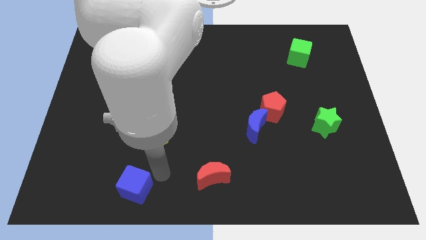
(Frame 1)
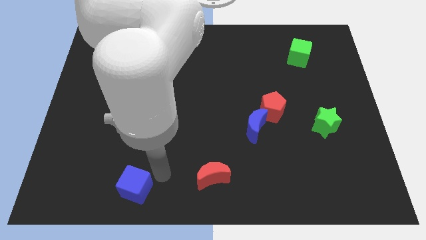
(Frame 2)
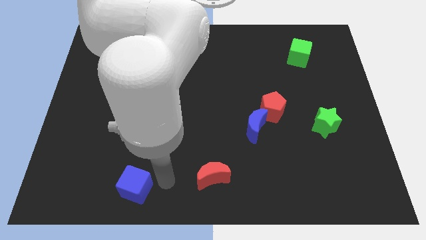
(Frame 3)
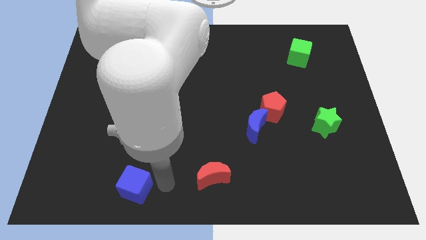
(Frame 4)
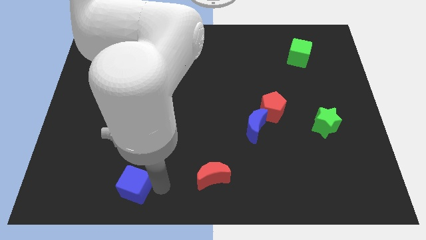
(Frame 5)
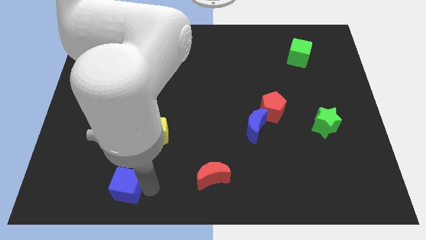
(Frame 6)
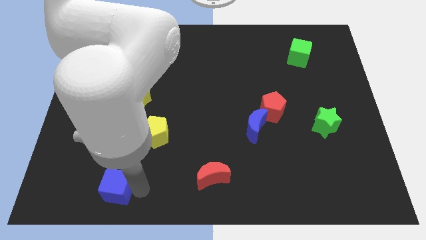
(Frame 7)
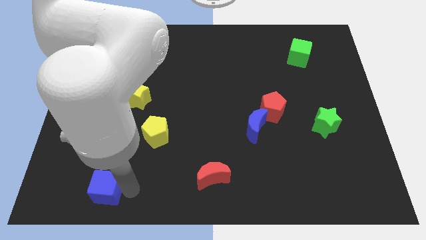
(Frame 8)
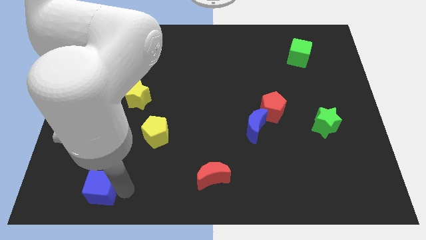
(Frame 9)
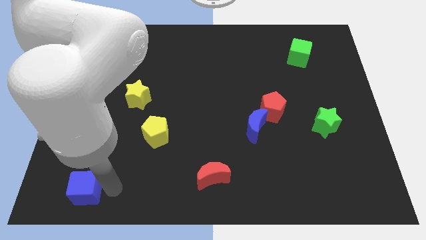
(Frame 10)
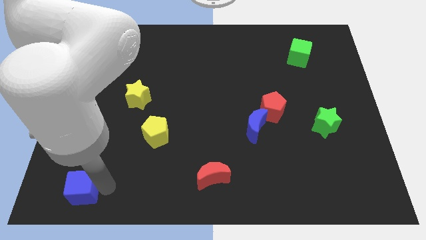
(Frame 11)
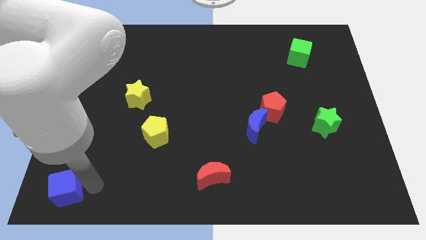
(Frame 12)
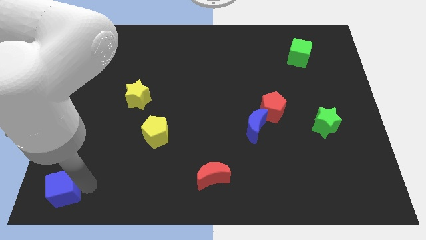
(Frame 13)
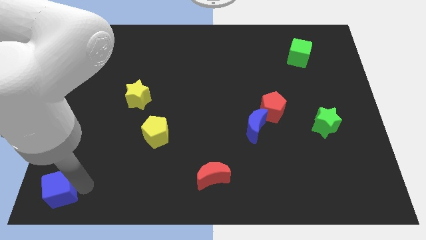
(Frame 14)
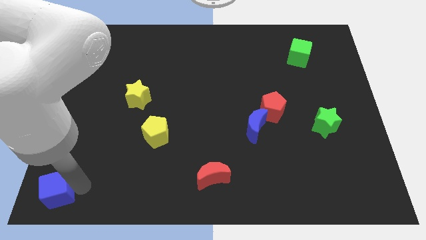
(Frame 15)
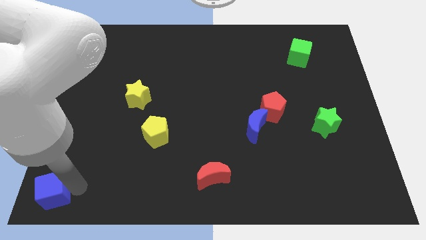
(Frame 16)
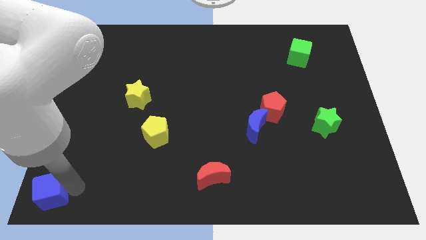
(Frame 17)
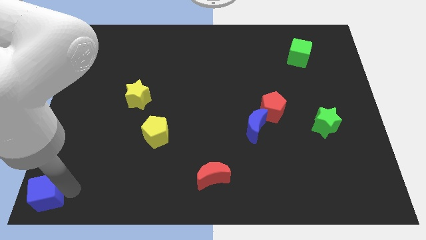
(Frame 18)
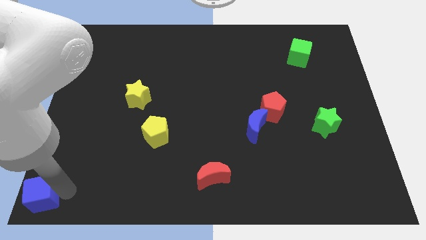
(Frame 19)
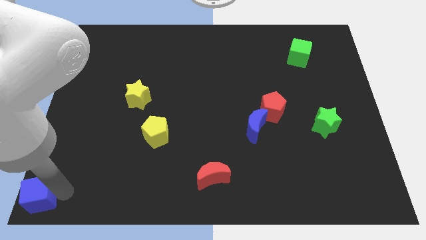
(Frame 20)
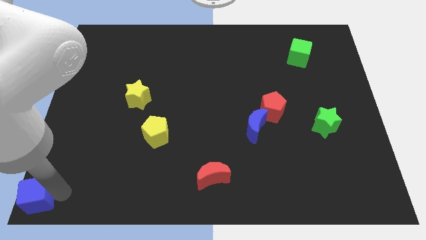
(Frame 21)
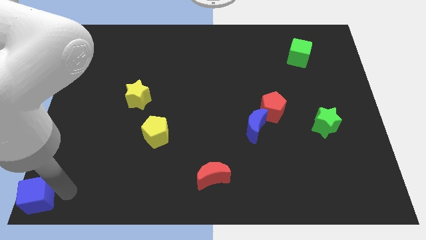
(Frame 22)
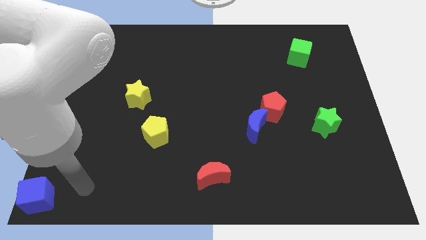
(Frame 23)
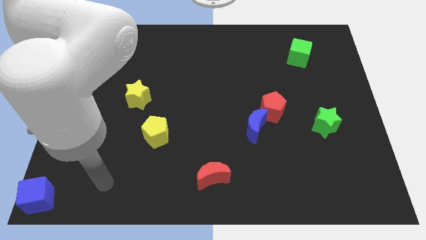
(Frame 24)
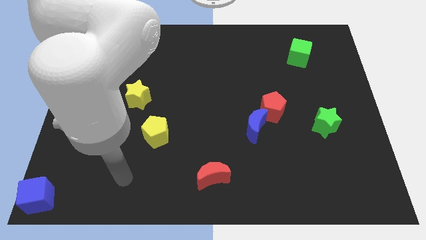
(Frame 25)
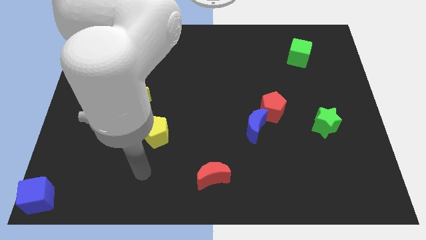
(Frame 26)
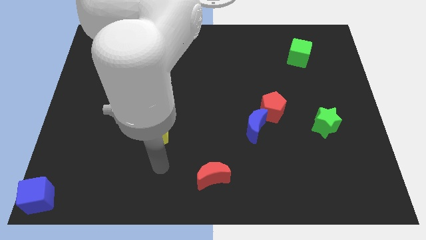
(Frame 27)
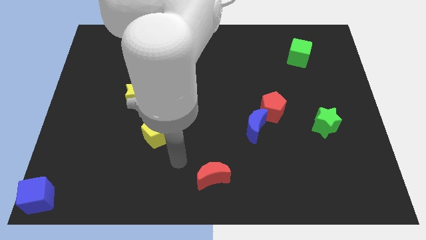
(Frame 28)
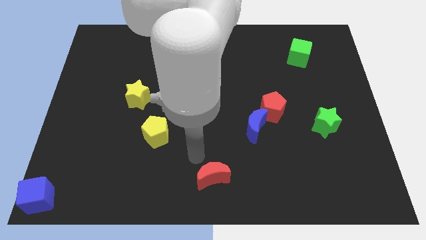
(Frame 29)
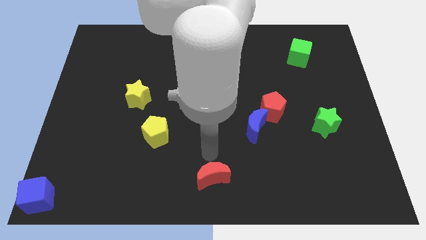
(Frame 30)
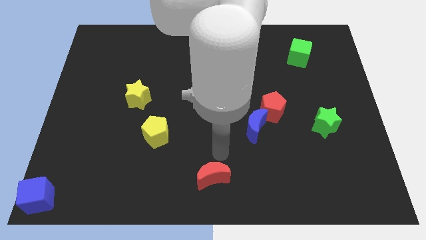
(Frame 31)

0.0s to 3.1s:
push blue cube into bottom left corner of the board

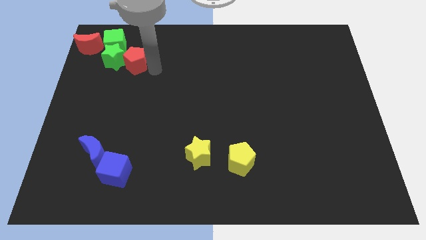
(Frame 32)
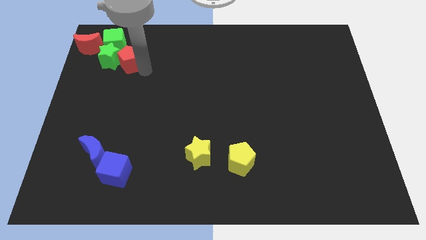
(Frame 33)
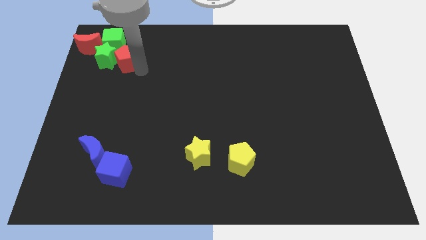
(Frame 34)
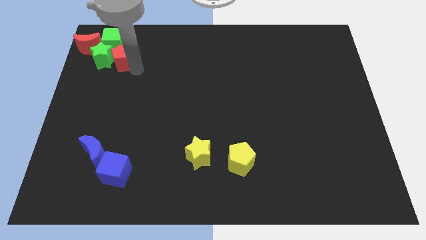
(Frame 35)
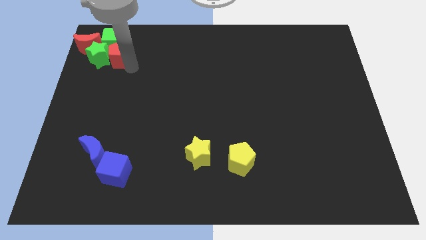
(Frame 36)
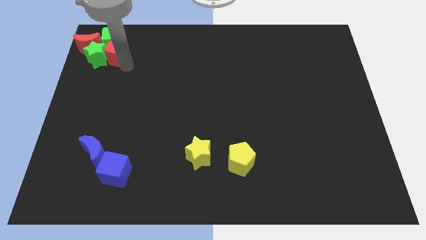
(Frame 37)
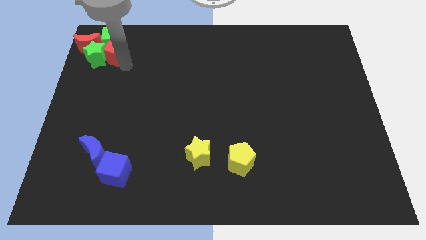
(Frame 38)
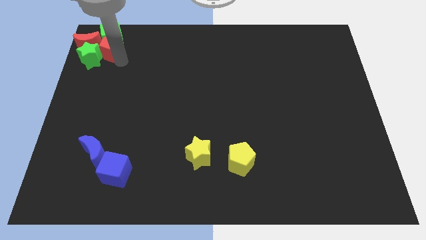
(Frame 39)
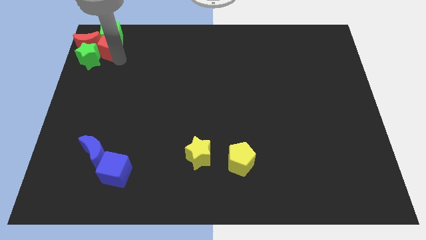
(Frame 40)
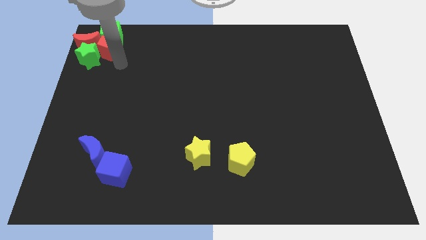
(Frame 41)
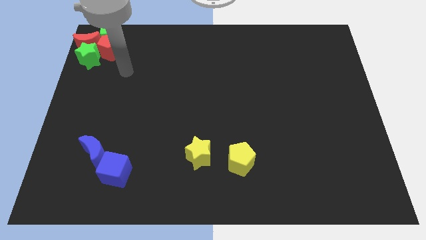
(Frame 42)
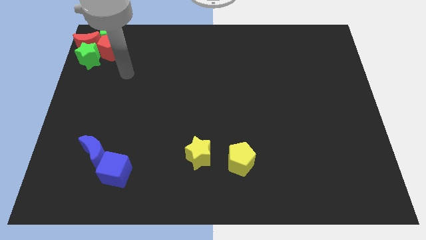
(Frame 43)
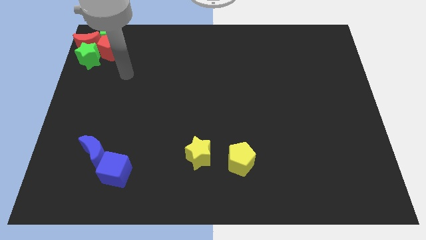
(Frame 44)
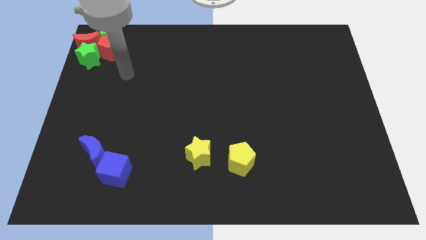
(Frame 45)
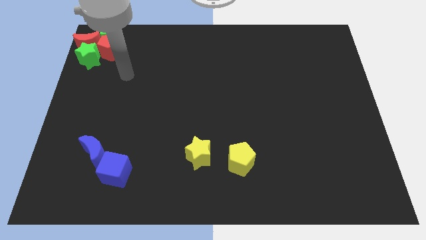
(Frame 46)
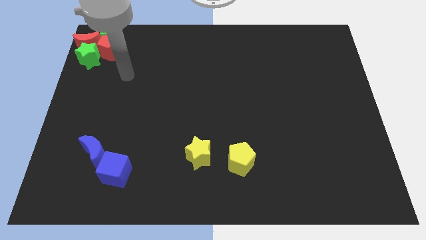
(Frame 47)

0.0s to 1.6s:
join the red and green blocks at the top left corner of the board

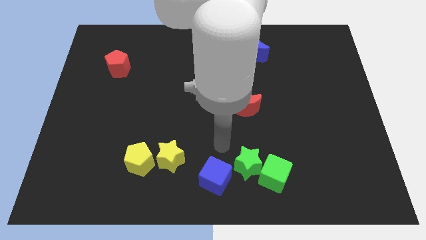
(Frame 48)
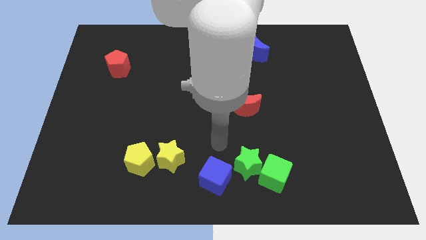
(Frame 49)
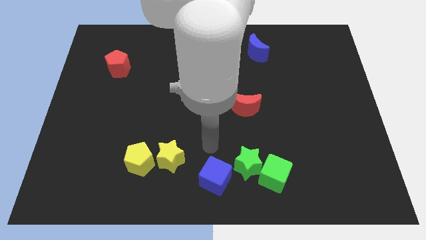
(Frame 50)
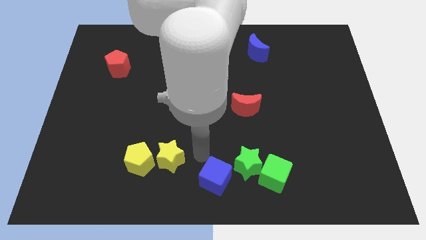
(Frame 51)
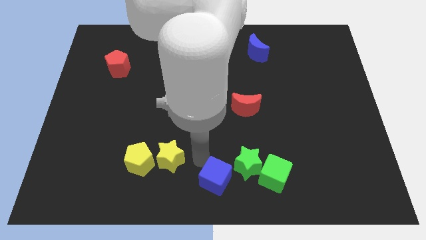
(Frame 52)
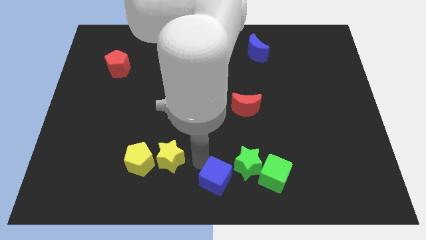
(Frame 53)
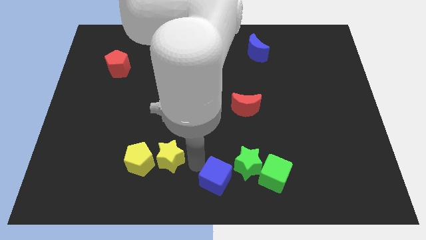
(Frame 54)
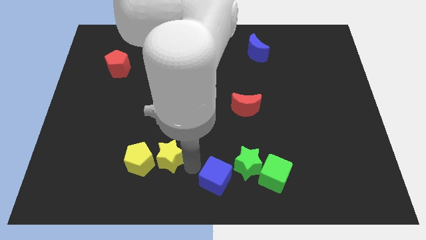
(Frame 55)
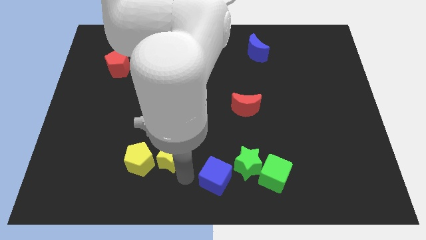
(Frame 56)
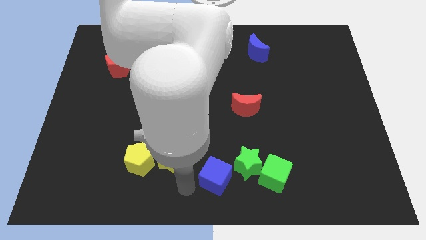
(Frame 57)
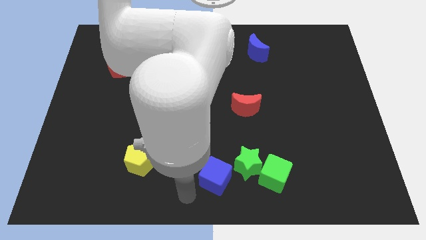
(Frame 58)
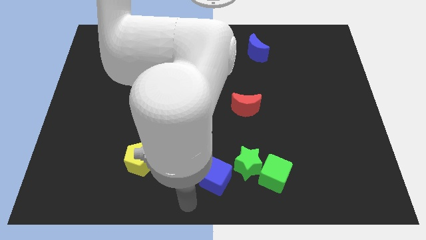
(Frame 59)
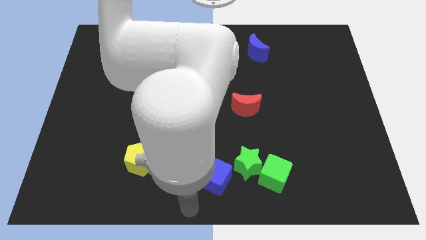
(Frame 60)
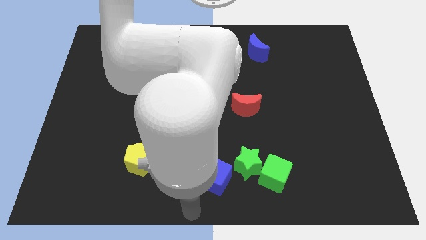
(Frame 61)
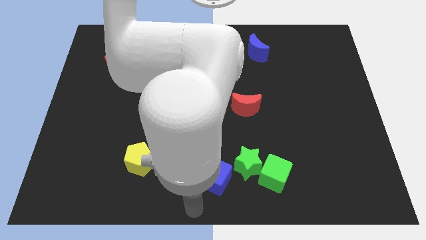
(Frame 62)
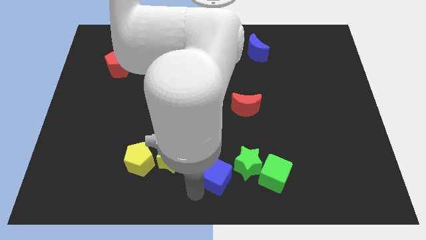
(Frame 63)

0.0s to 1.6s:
move your arm to the bottom of the blue cube

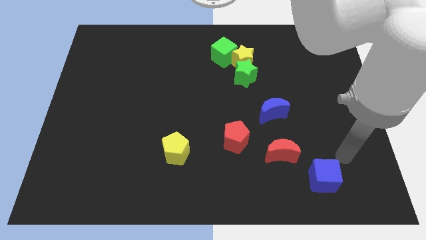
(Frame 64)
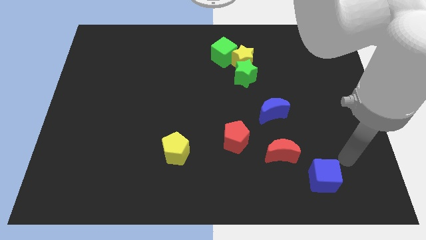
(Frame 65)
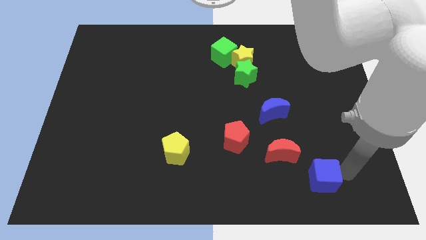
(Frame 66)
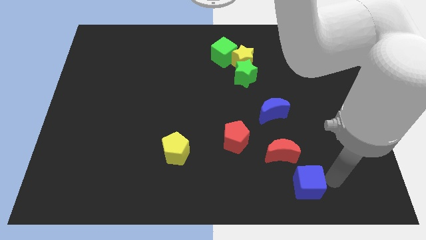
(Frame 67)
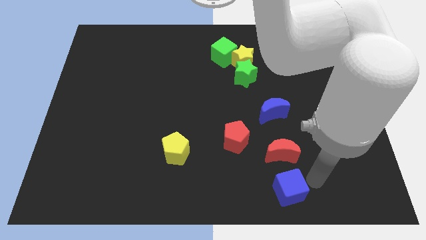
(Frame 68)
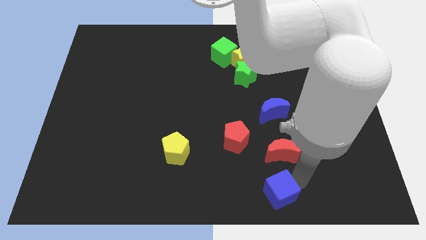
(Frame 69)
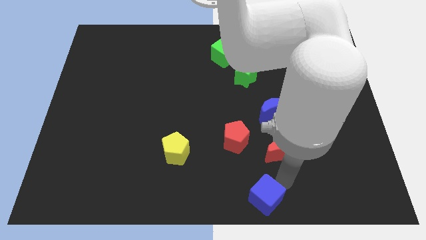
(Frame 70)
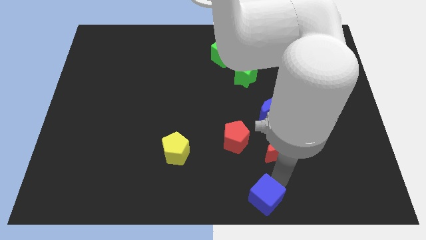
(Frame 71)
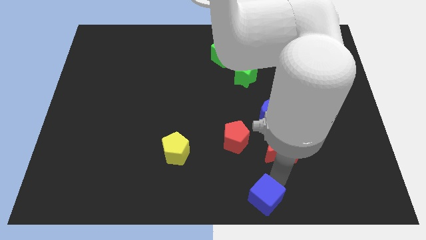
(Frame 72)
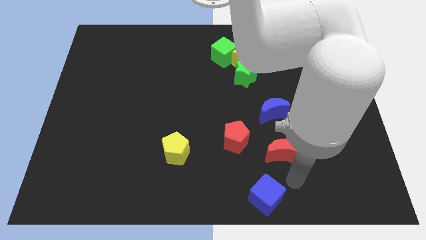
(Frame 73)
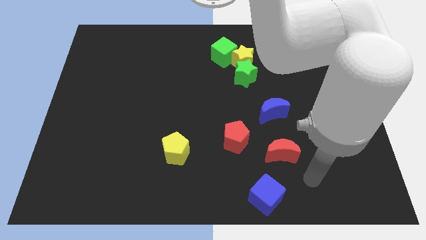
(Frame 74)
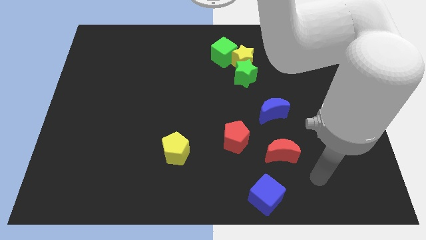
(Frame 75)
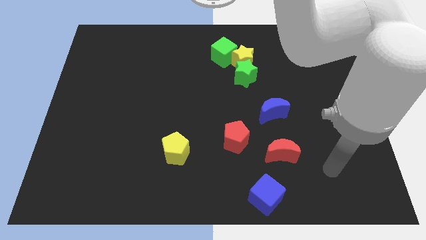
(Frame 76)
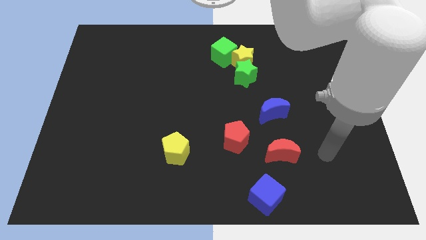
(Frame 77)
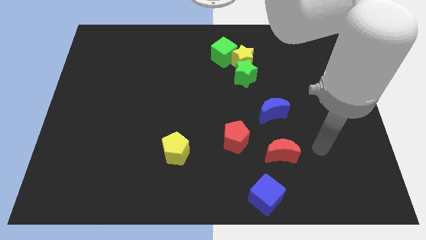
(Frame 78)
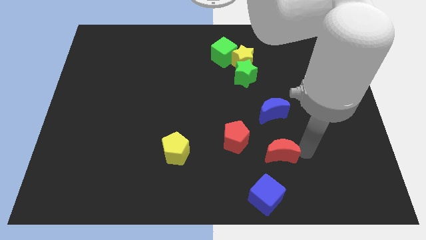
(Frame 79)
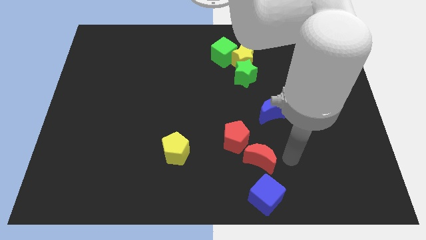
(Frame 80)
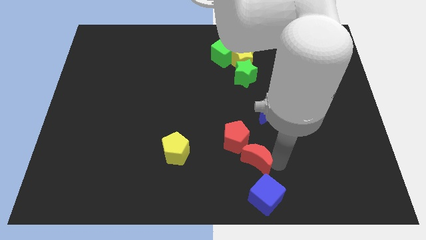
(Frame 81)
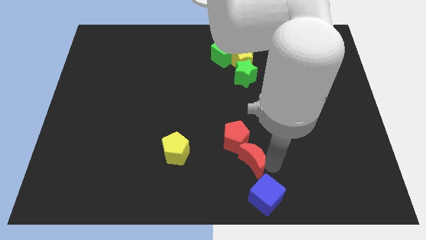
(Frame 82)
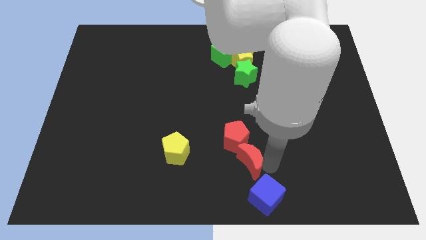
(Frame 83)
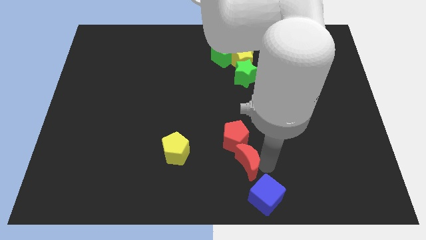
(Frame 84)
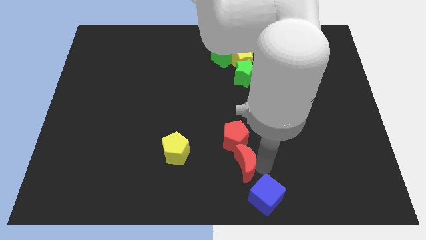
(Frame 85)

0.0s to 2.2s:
push blue cube towards the bottom center

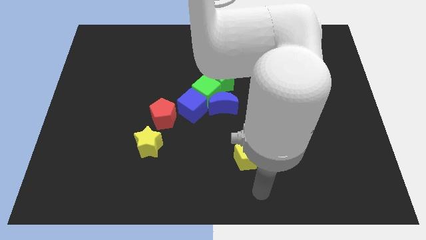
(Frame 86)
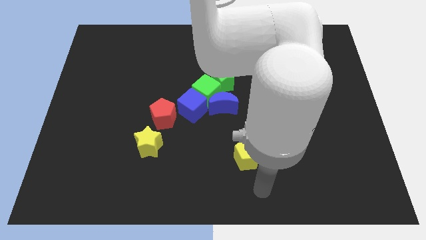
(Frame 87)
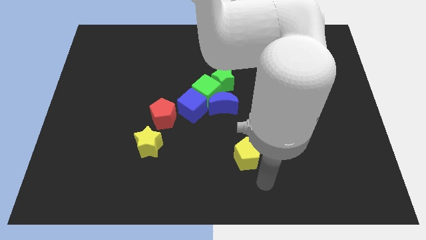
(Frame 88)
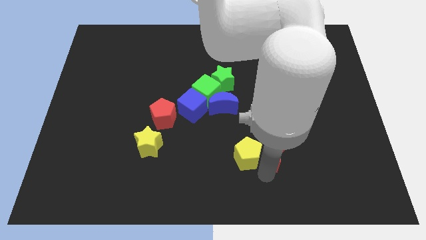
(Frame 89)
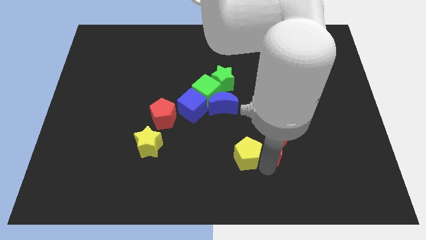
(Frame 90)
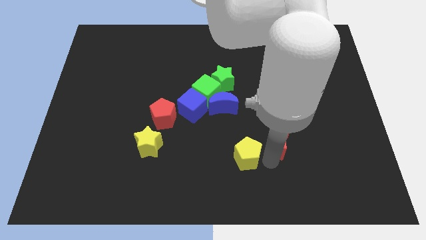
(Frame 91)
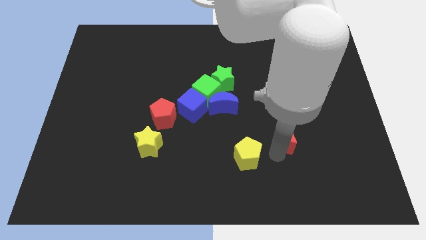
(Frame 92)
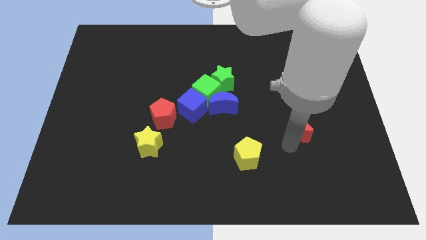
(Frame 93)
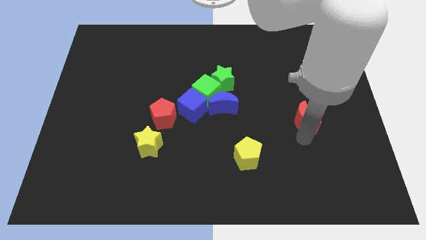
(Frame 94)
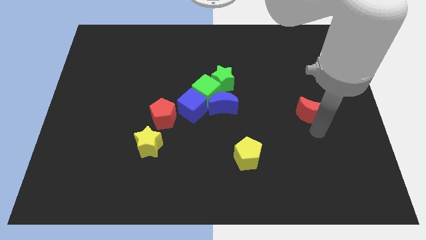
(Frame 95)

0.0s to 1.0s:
separate the red crescent and yellow pentagon
